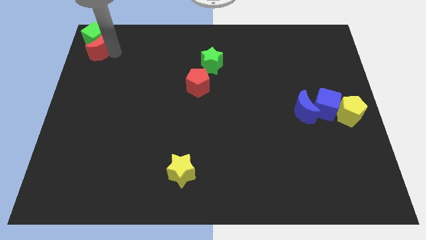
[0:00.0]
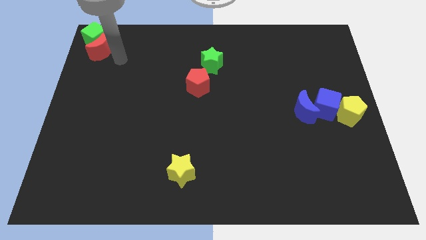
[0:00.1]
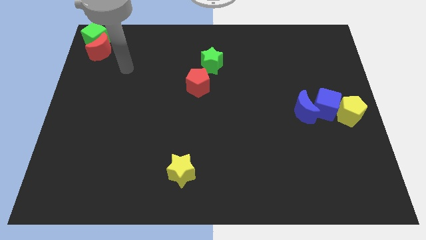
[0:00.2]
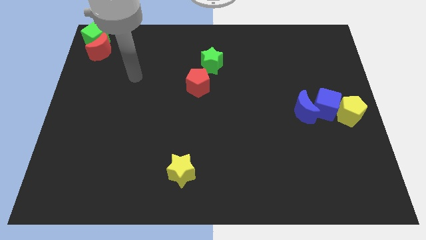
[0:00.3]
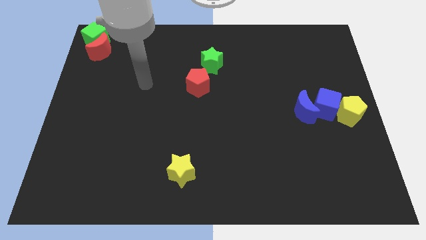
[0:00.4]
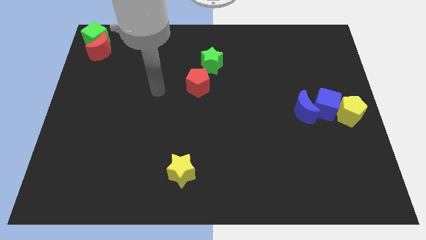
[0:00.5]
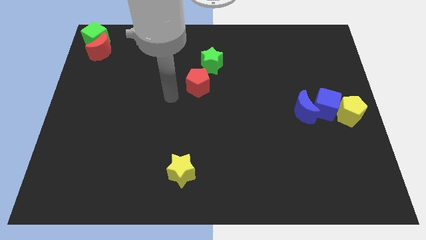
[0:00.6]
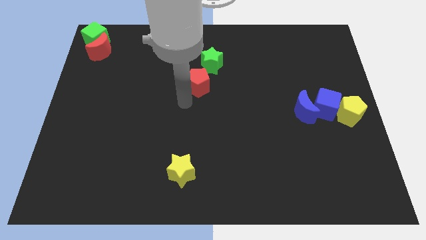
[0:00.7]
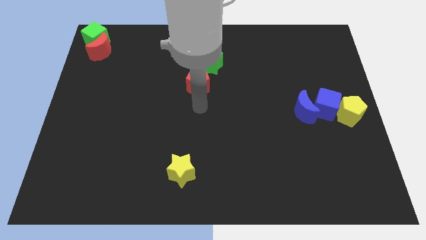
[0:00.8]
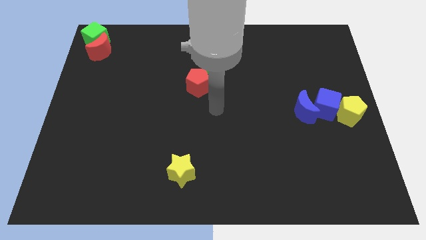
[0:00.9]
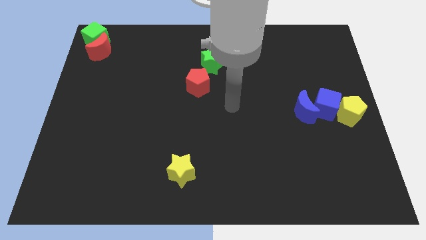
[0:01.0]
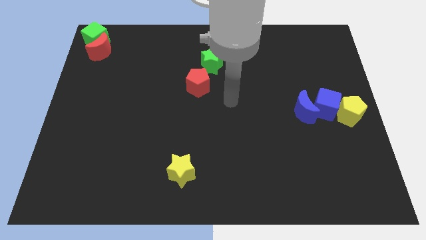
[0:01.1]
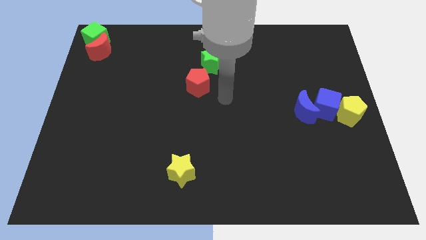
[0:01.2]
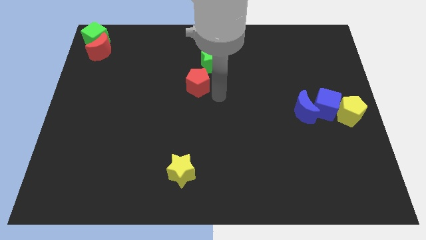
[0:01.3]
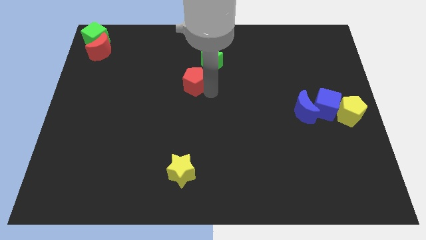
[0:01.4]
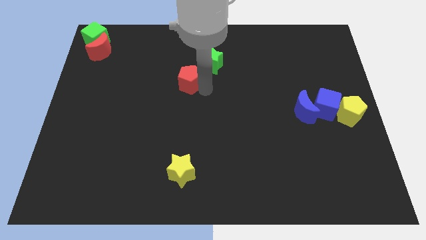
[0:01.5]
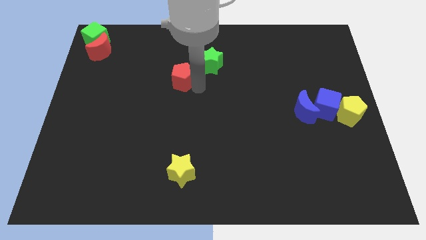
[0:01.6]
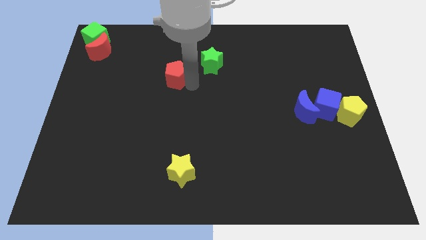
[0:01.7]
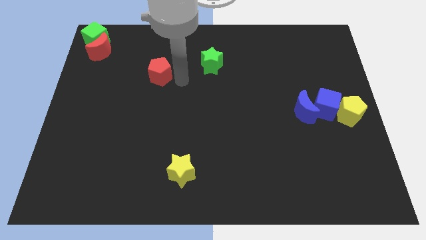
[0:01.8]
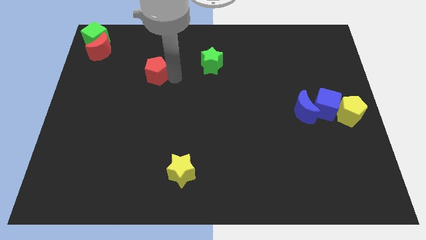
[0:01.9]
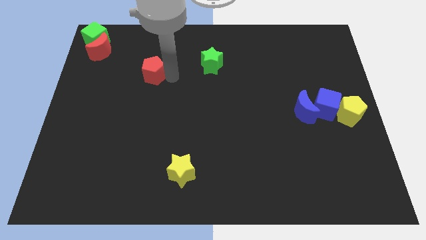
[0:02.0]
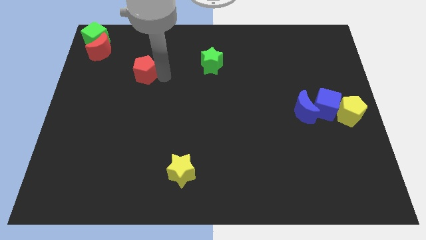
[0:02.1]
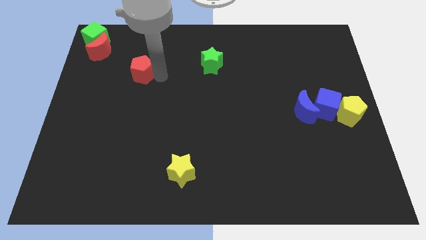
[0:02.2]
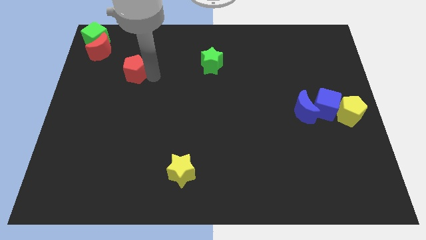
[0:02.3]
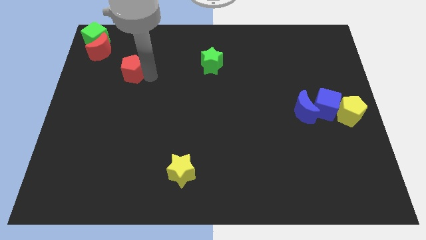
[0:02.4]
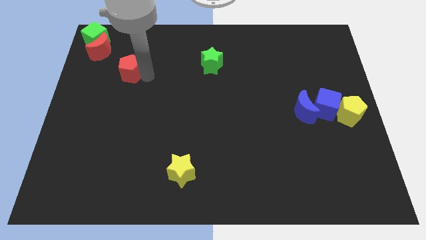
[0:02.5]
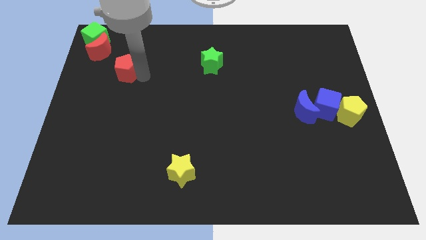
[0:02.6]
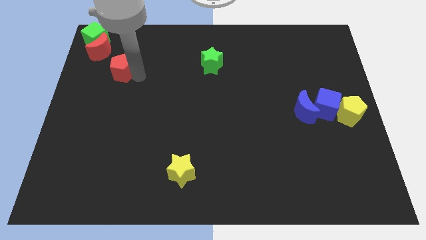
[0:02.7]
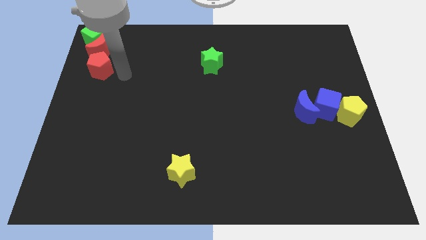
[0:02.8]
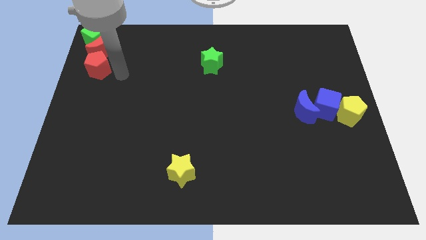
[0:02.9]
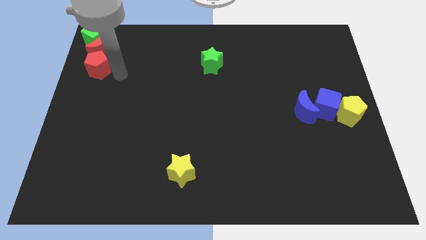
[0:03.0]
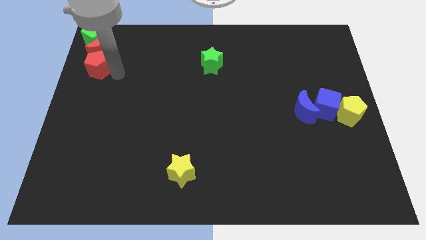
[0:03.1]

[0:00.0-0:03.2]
move the red pentagon at the bottom of red crescent

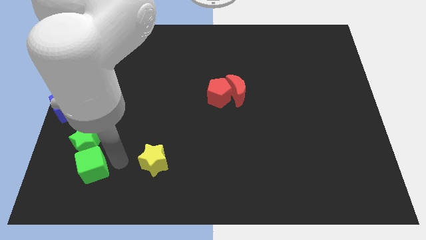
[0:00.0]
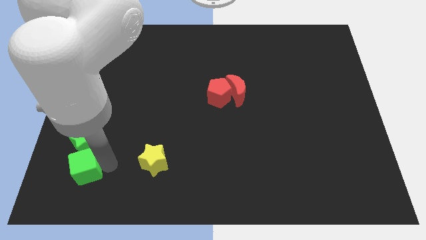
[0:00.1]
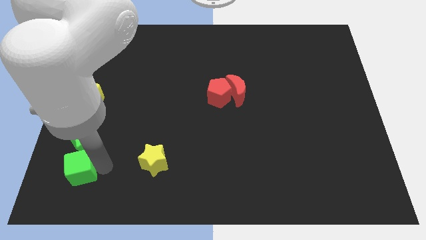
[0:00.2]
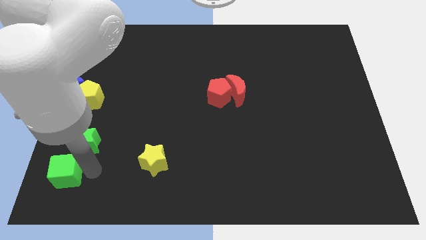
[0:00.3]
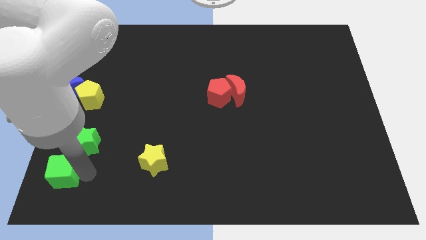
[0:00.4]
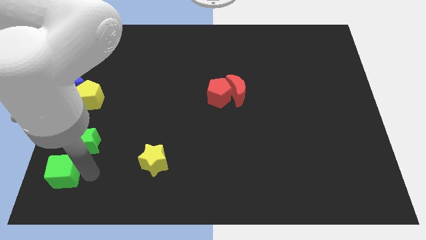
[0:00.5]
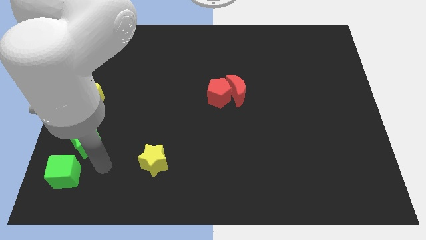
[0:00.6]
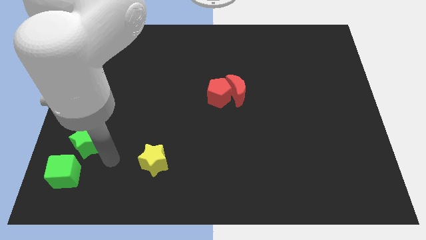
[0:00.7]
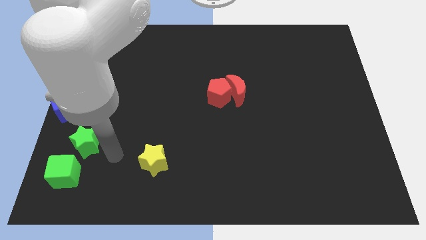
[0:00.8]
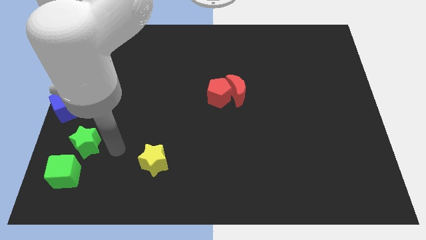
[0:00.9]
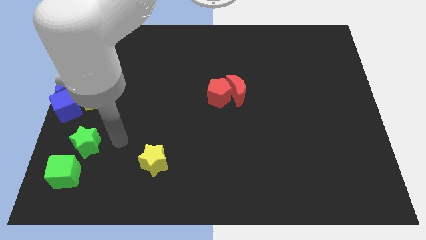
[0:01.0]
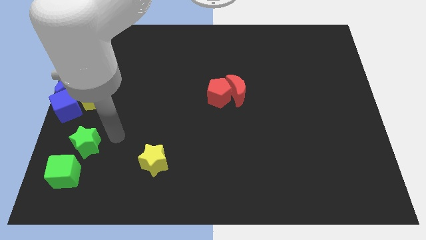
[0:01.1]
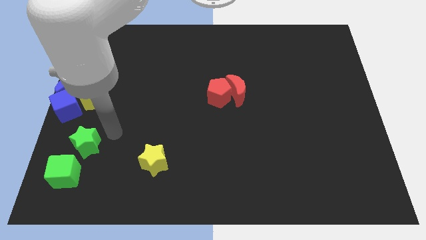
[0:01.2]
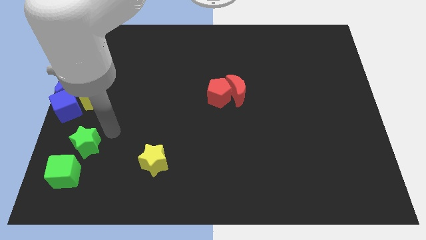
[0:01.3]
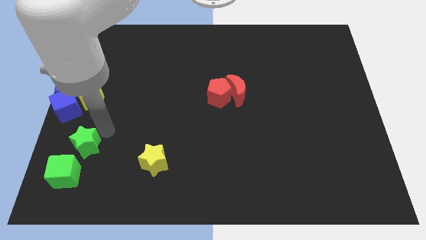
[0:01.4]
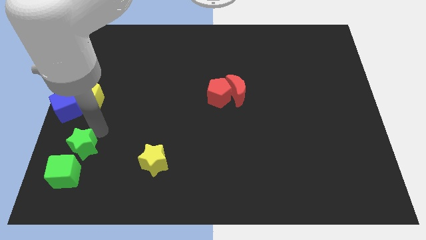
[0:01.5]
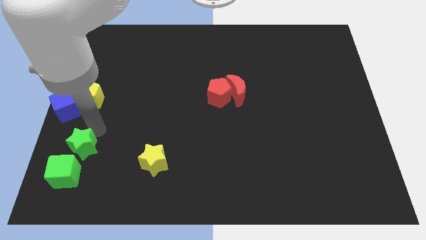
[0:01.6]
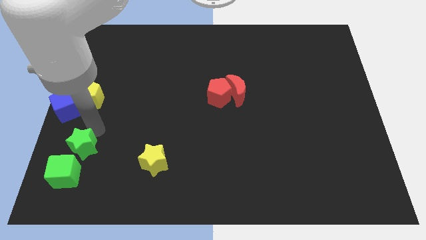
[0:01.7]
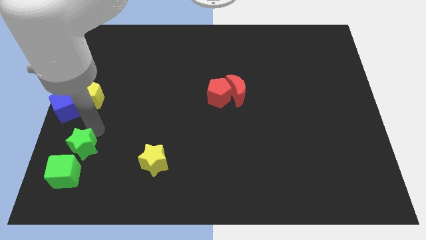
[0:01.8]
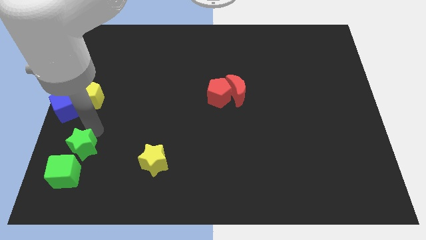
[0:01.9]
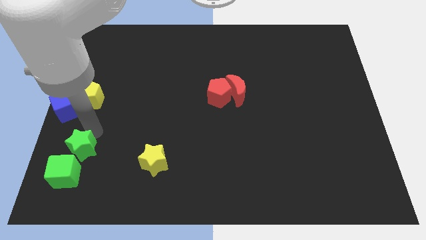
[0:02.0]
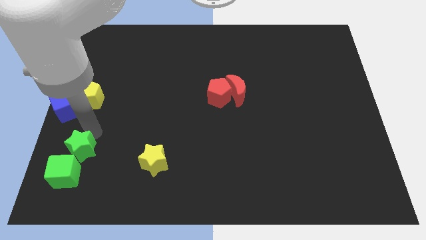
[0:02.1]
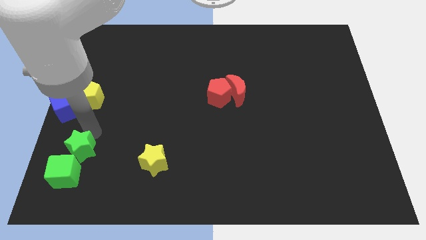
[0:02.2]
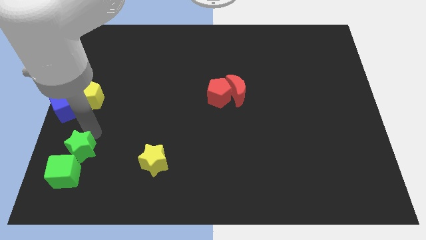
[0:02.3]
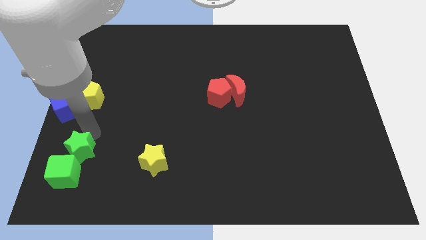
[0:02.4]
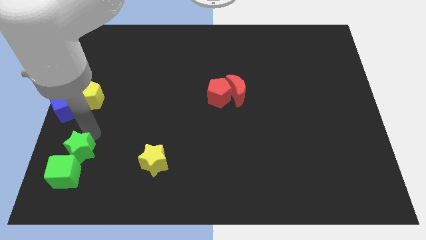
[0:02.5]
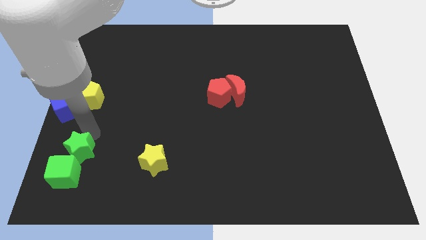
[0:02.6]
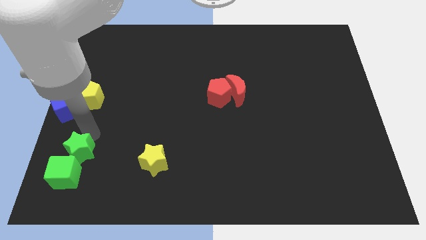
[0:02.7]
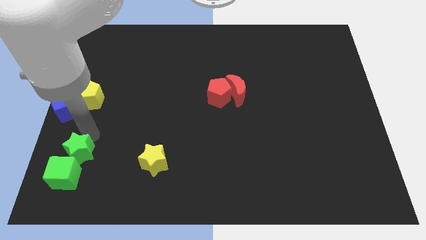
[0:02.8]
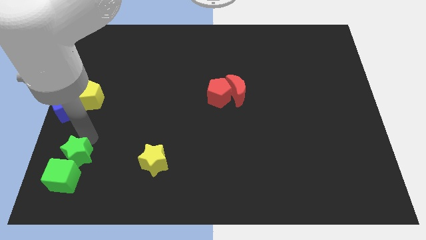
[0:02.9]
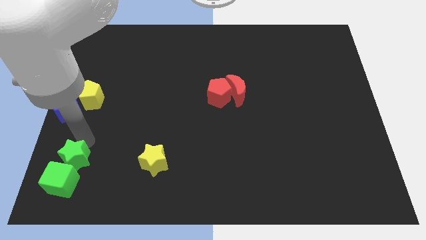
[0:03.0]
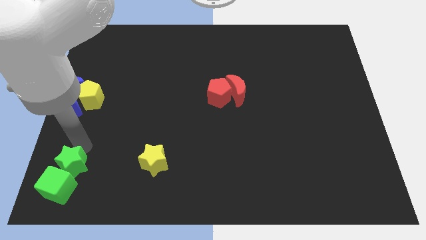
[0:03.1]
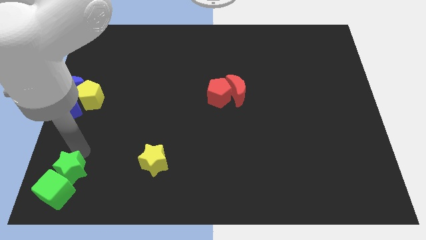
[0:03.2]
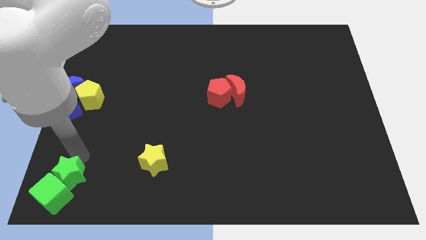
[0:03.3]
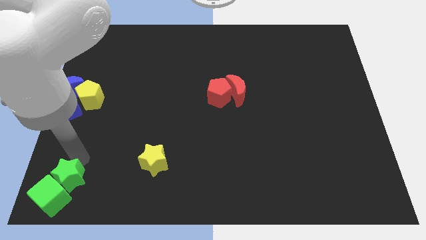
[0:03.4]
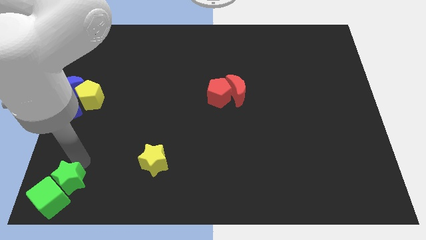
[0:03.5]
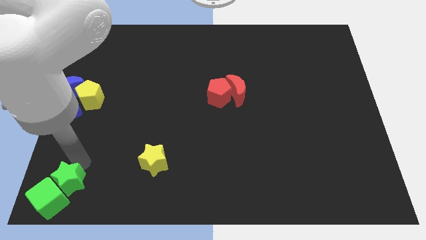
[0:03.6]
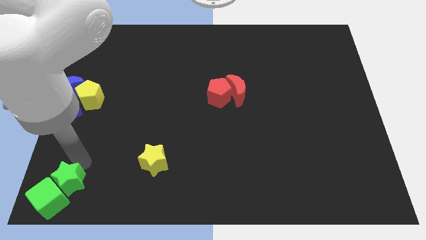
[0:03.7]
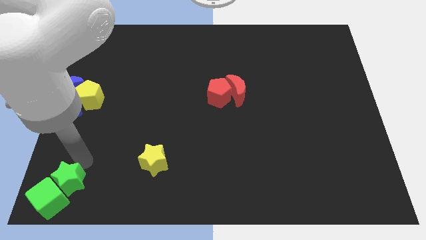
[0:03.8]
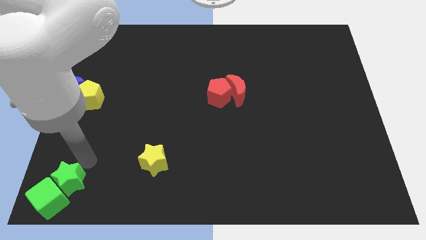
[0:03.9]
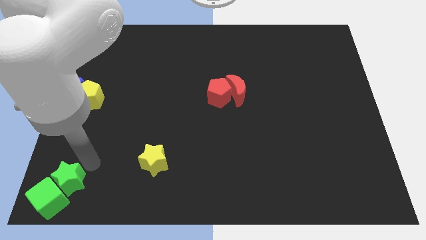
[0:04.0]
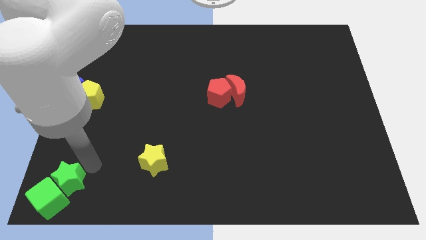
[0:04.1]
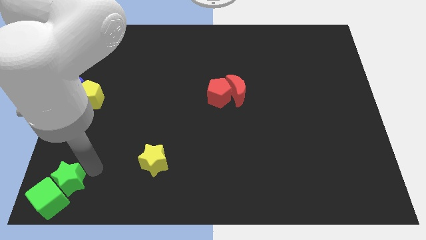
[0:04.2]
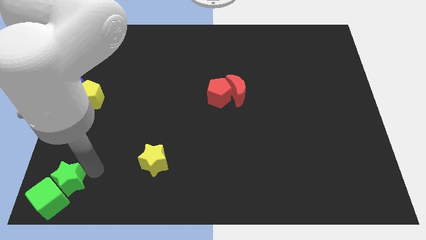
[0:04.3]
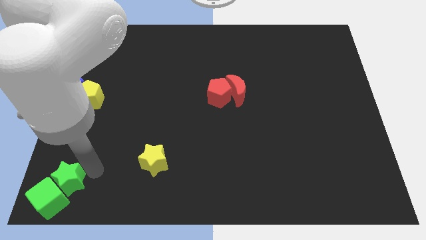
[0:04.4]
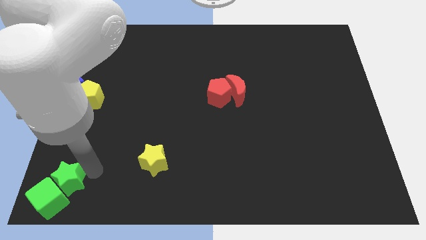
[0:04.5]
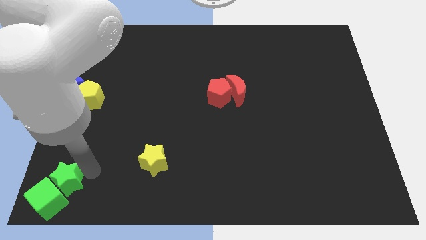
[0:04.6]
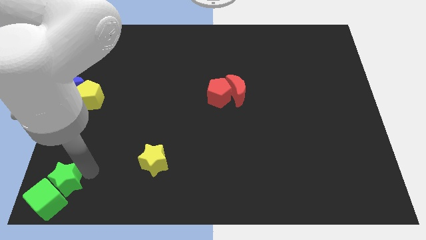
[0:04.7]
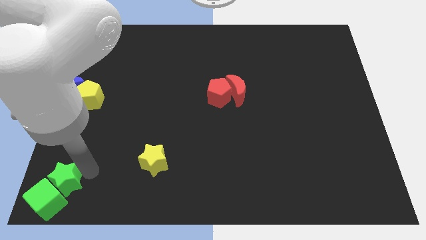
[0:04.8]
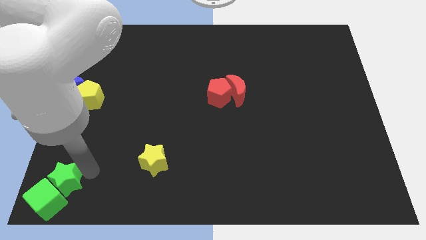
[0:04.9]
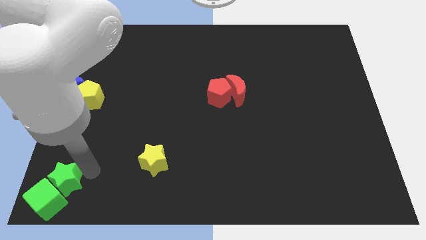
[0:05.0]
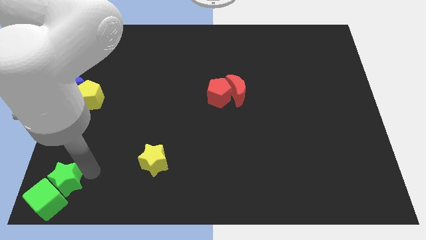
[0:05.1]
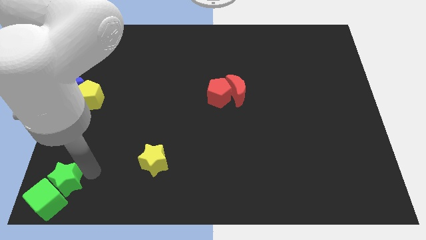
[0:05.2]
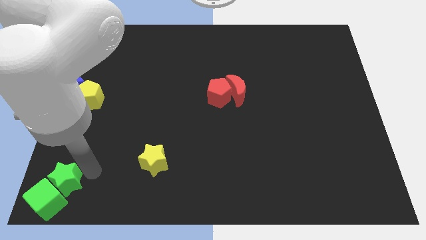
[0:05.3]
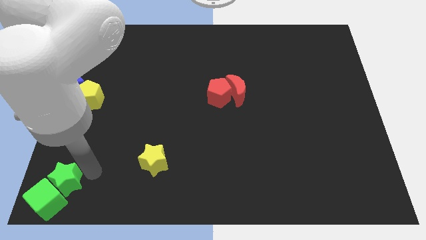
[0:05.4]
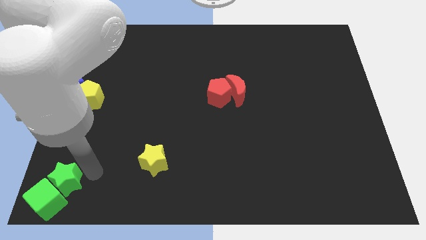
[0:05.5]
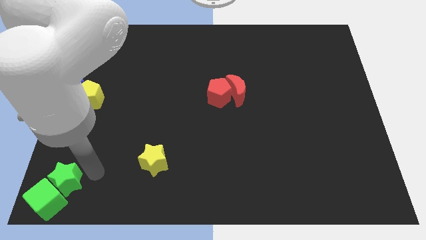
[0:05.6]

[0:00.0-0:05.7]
slide the green blocks towards the bottom left corner
